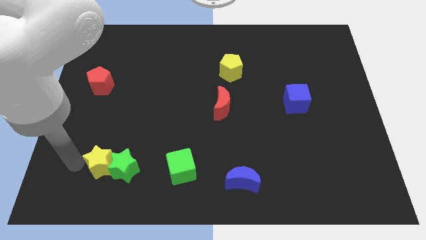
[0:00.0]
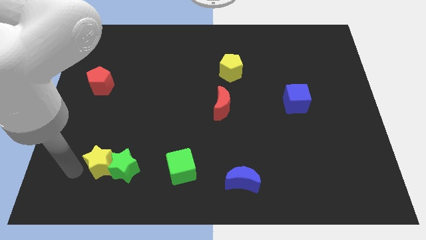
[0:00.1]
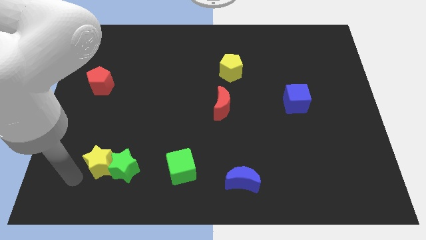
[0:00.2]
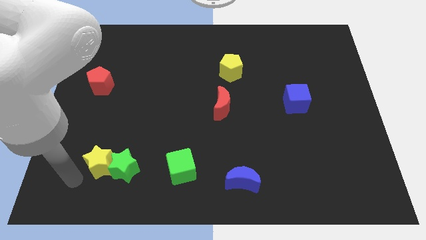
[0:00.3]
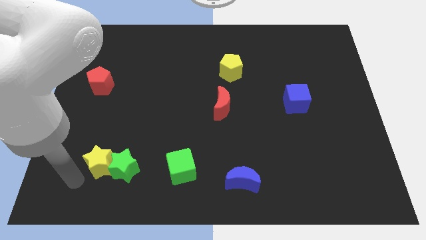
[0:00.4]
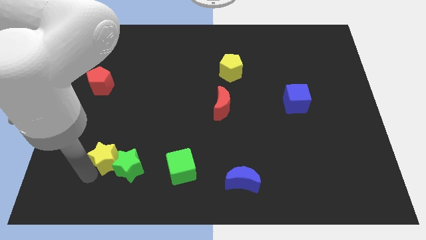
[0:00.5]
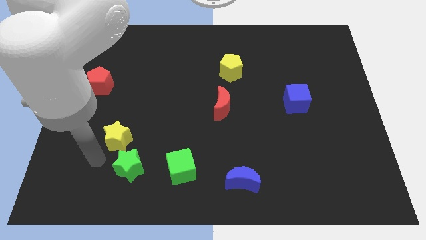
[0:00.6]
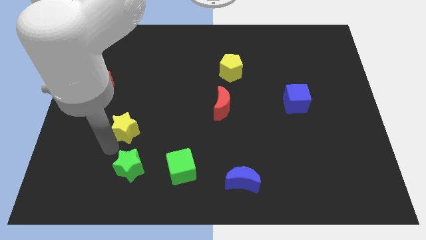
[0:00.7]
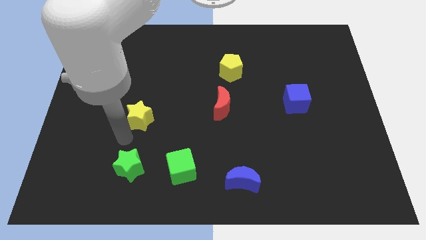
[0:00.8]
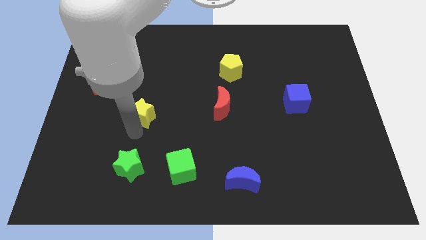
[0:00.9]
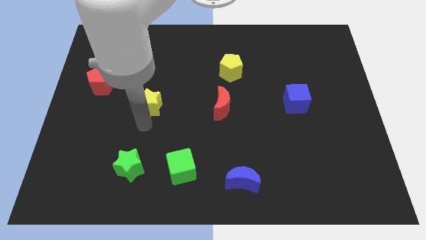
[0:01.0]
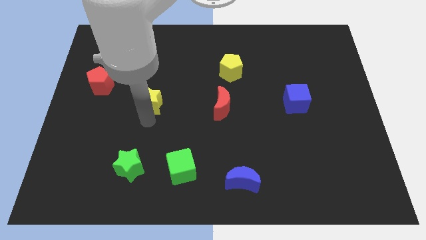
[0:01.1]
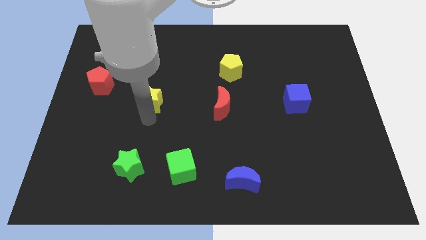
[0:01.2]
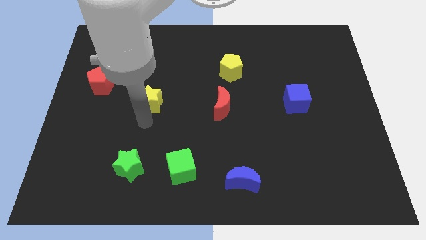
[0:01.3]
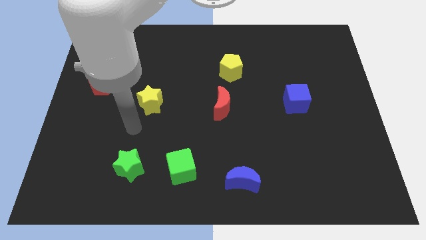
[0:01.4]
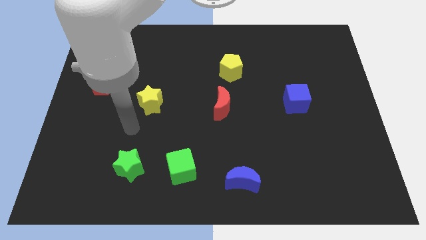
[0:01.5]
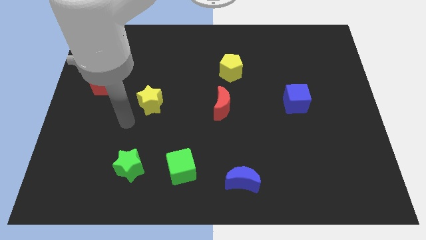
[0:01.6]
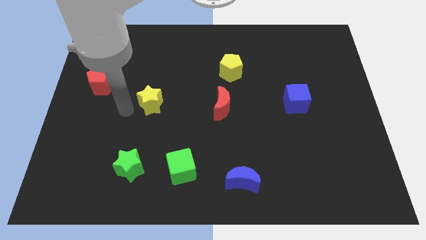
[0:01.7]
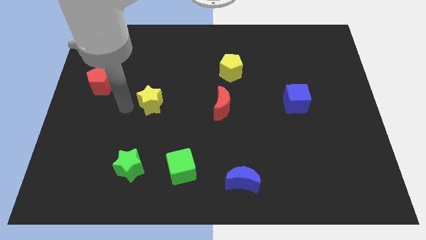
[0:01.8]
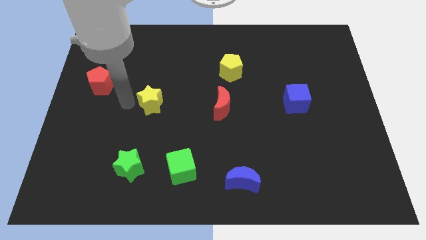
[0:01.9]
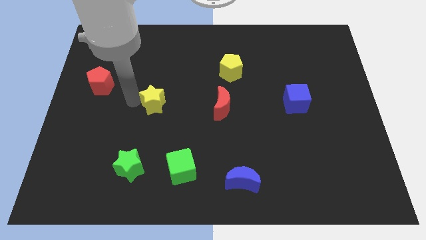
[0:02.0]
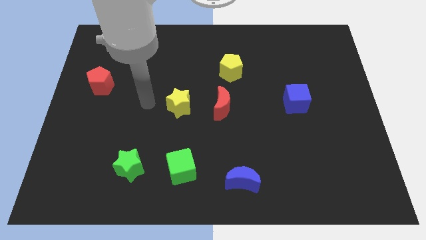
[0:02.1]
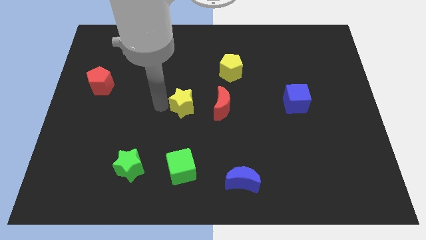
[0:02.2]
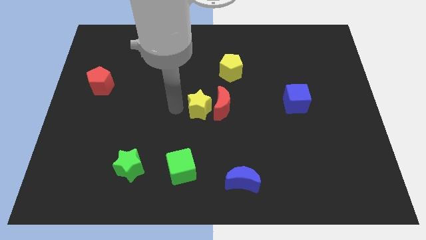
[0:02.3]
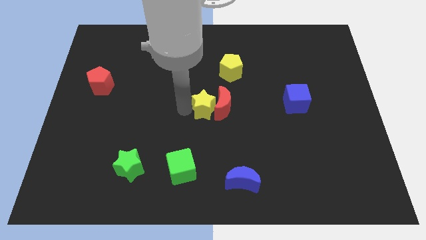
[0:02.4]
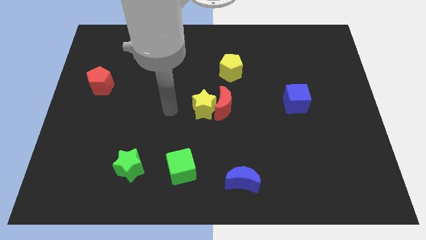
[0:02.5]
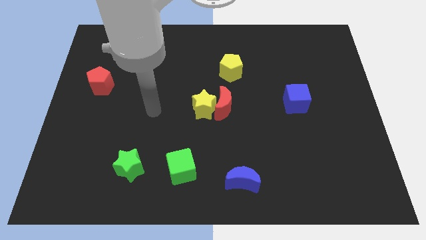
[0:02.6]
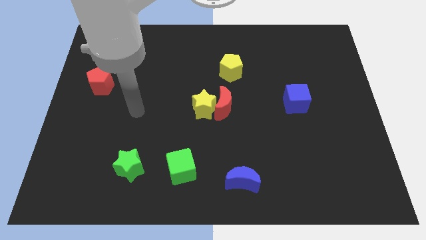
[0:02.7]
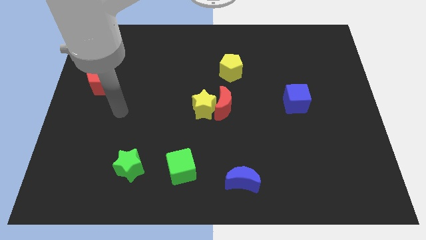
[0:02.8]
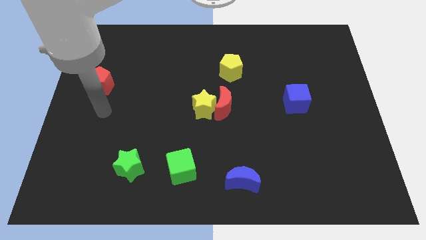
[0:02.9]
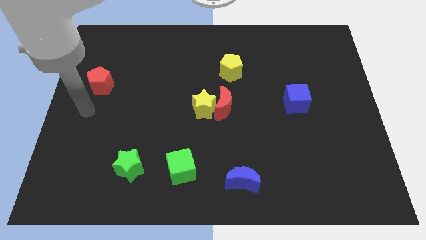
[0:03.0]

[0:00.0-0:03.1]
move the yellow star on the left side of the red crescent

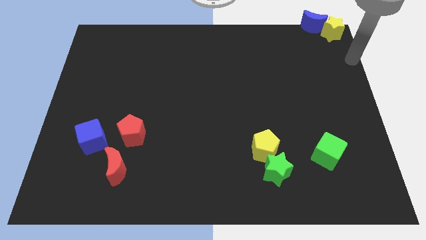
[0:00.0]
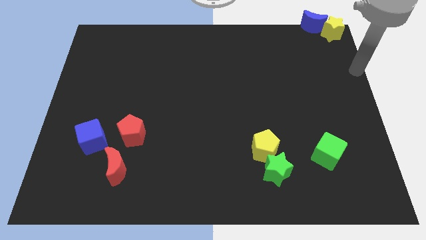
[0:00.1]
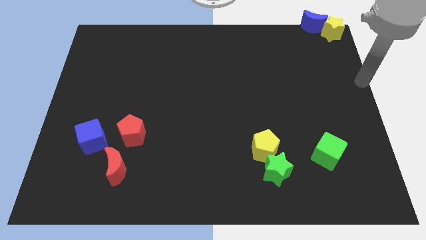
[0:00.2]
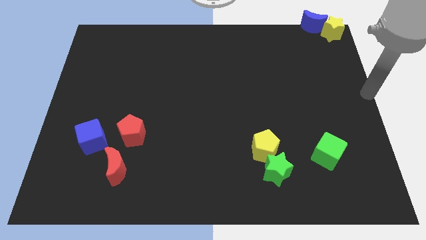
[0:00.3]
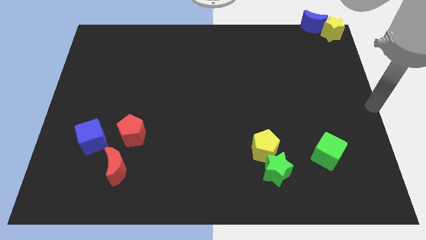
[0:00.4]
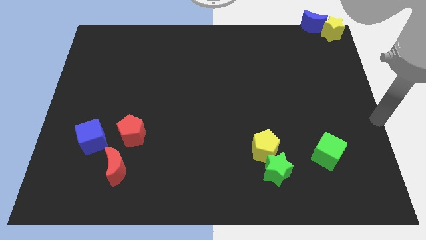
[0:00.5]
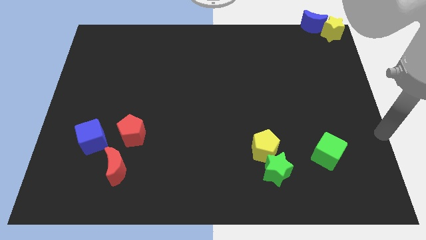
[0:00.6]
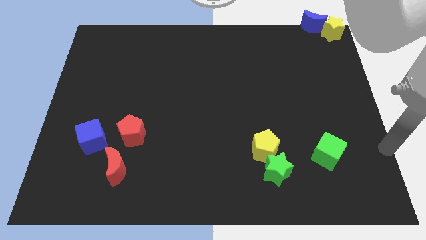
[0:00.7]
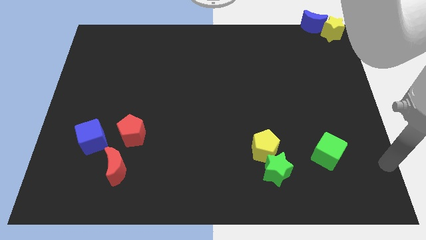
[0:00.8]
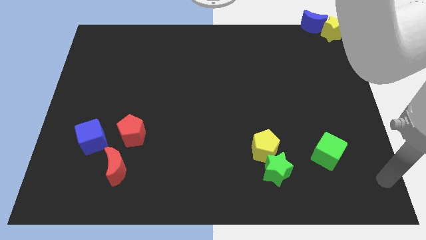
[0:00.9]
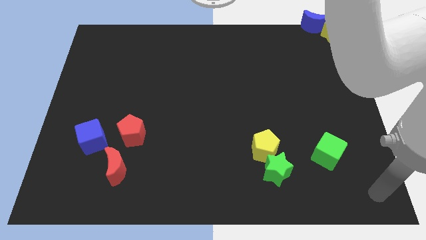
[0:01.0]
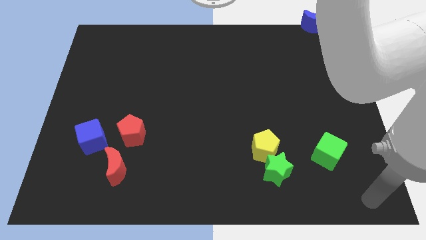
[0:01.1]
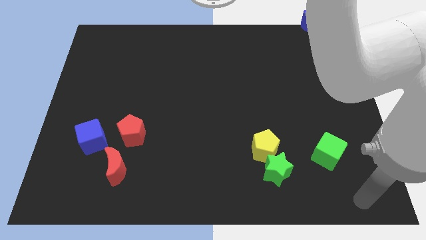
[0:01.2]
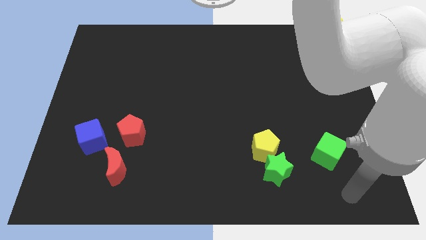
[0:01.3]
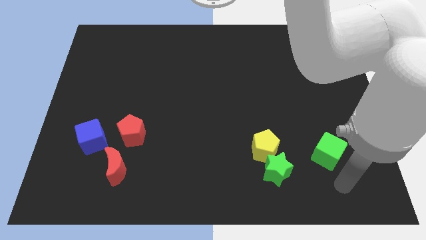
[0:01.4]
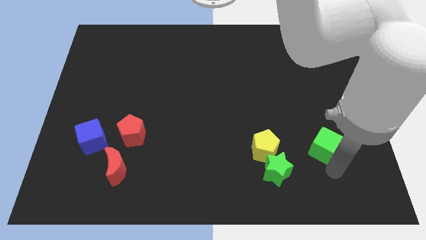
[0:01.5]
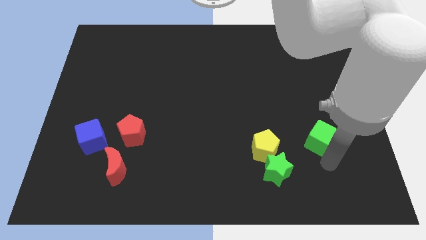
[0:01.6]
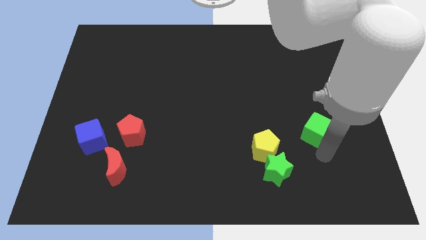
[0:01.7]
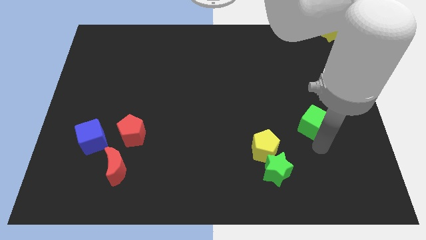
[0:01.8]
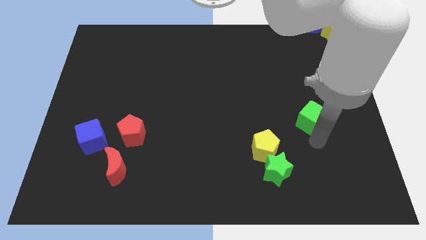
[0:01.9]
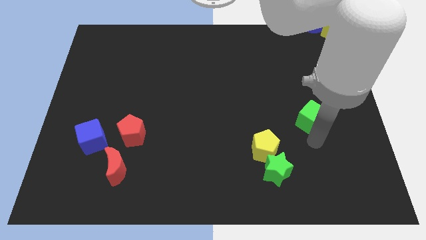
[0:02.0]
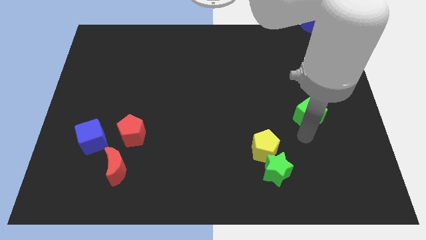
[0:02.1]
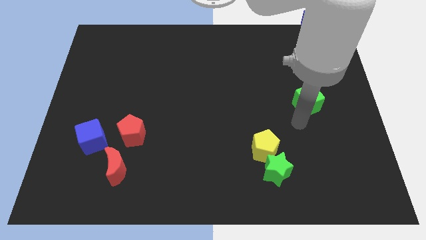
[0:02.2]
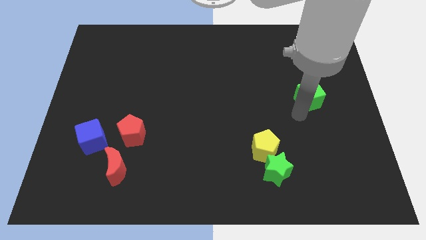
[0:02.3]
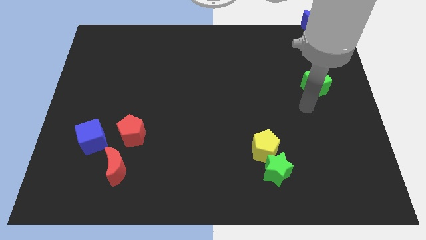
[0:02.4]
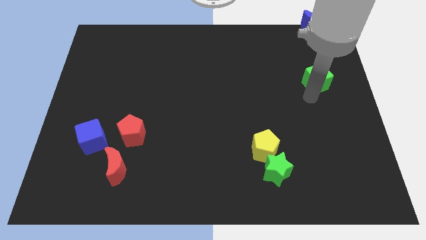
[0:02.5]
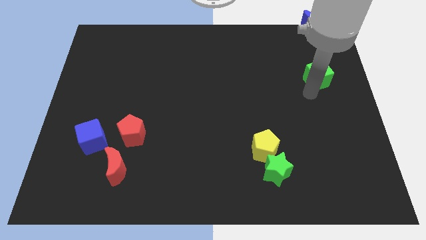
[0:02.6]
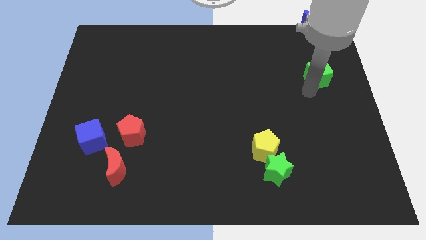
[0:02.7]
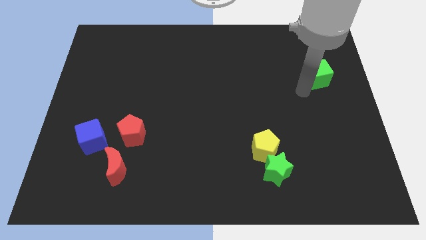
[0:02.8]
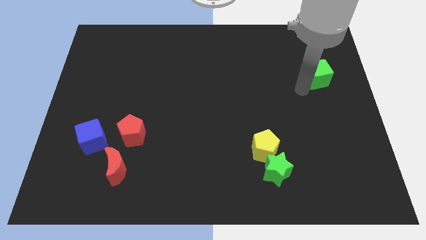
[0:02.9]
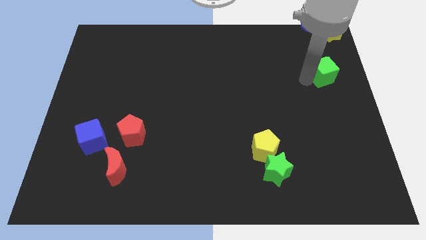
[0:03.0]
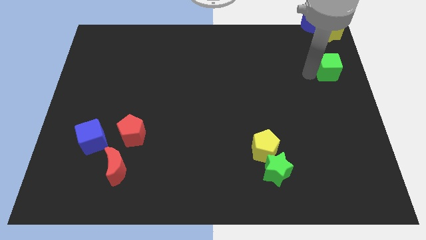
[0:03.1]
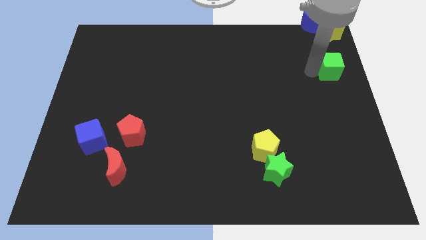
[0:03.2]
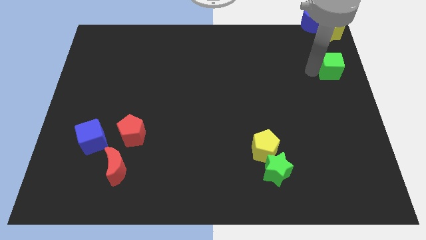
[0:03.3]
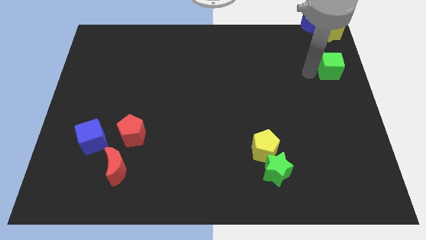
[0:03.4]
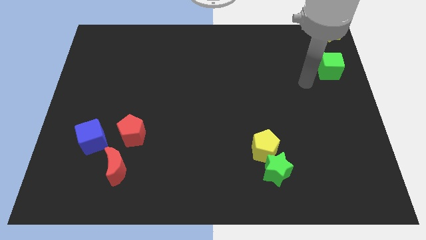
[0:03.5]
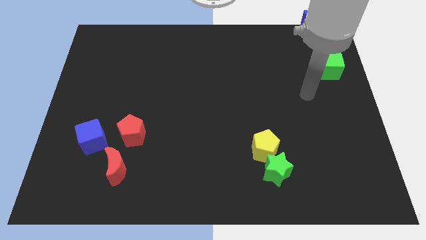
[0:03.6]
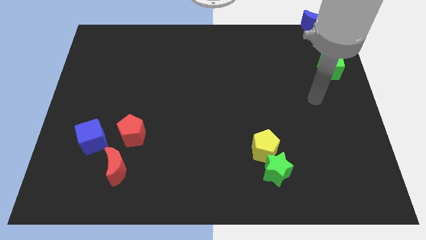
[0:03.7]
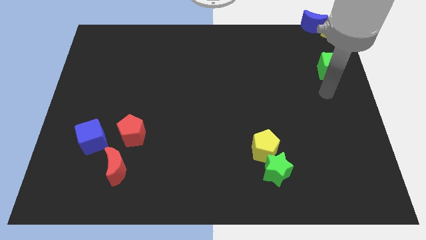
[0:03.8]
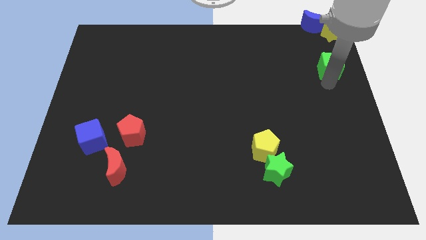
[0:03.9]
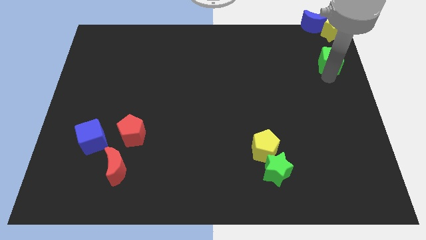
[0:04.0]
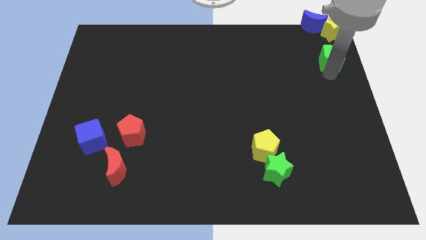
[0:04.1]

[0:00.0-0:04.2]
move green cube below the yellow star

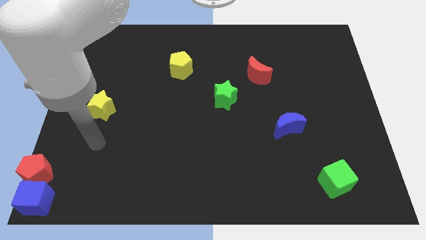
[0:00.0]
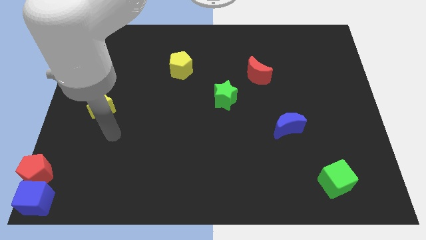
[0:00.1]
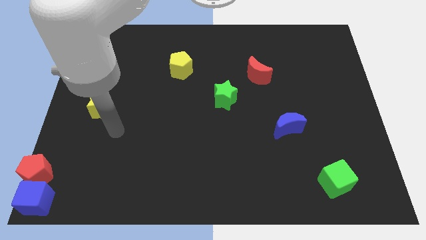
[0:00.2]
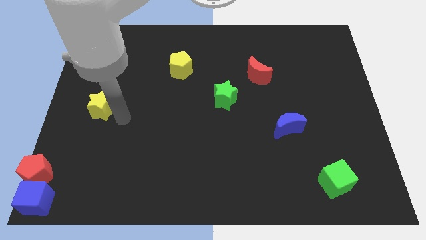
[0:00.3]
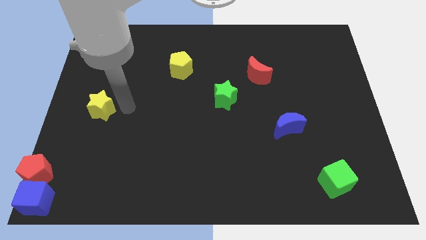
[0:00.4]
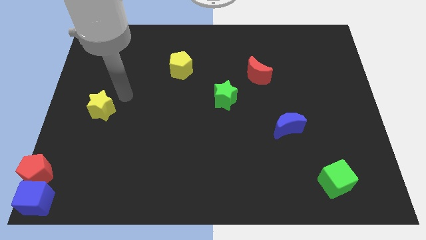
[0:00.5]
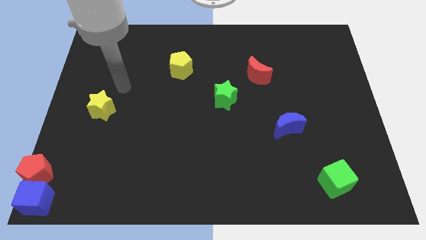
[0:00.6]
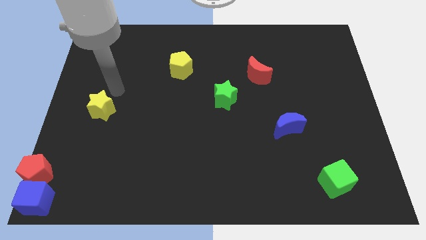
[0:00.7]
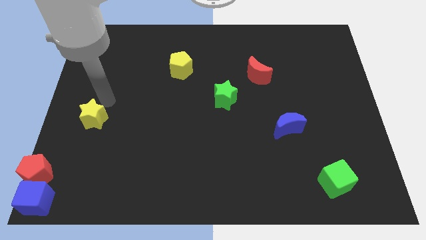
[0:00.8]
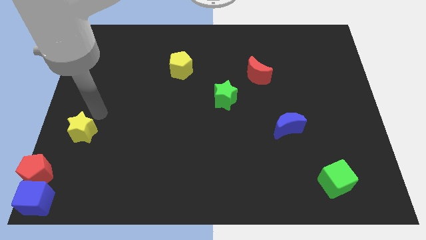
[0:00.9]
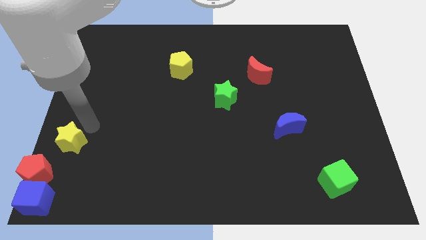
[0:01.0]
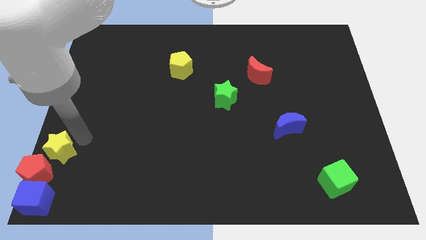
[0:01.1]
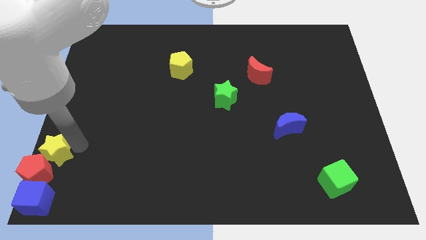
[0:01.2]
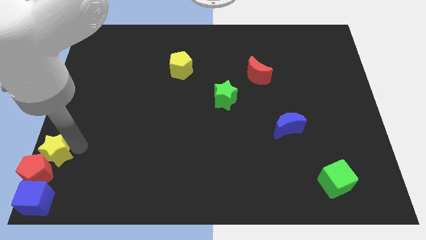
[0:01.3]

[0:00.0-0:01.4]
move the yellow star near to the top side of the red pentagon

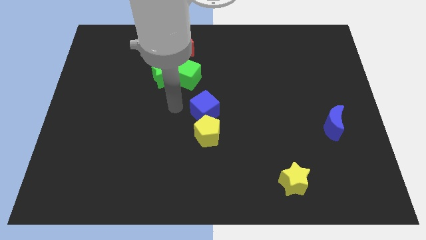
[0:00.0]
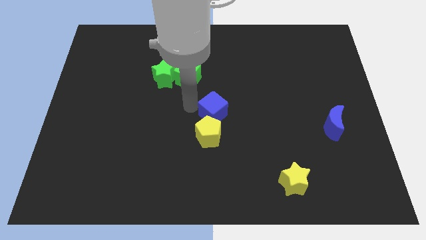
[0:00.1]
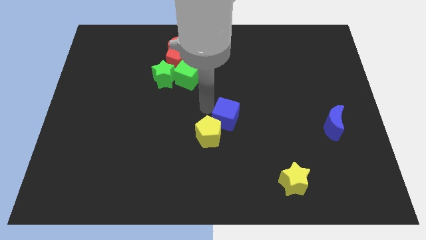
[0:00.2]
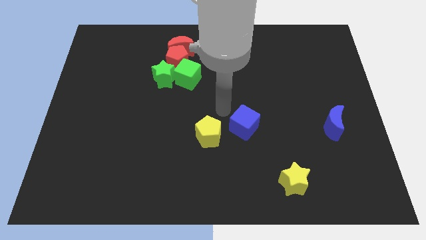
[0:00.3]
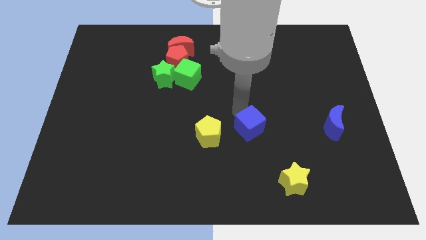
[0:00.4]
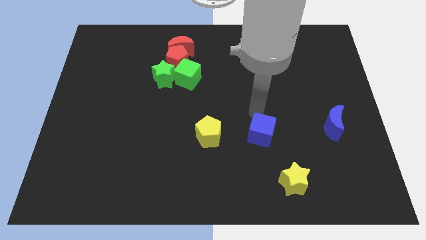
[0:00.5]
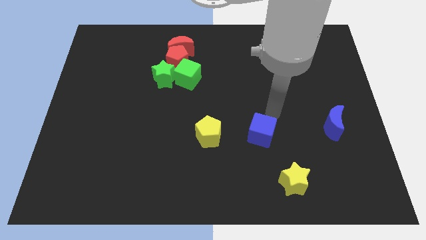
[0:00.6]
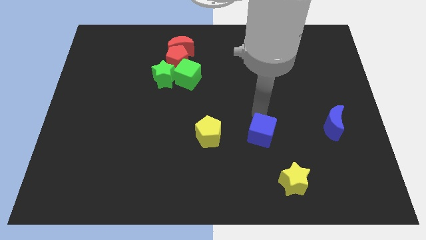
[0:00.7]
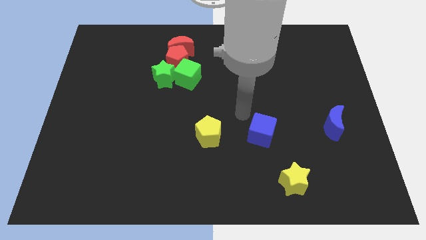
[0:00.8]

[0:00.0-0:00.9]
push the blue cube to the right of the yellow pentagon
